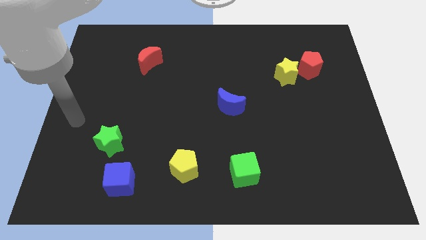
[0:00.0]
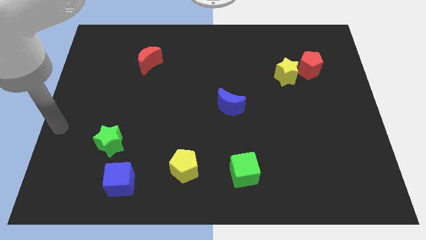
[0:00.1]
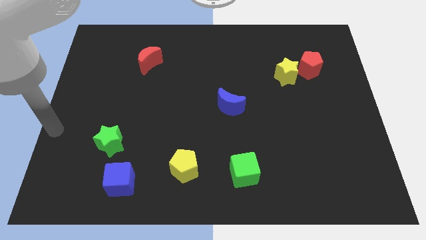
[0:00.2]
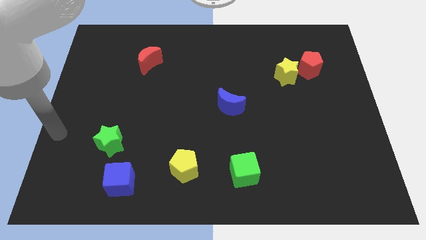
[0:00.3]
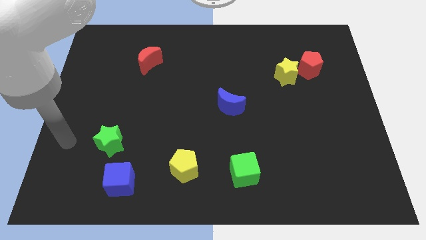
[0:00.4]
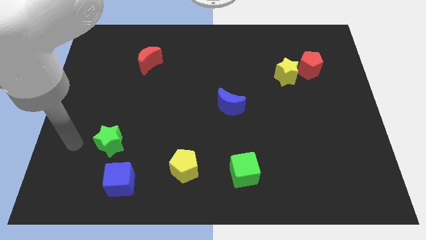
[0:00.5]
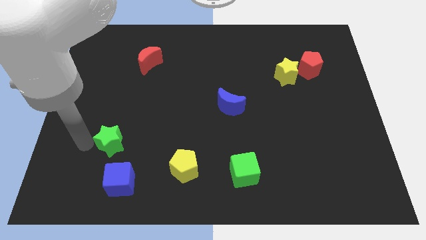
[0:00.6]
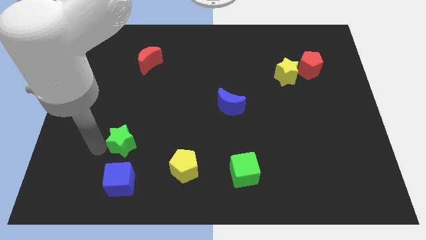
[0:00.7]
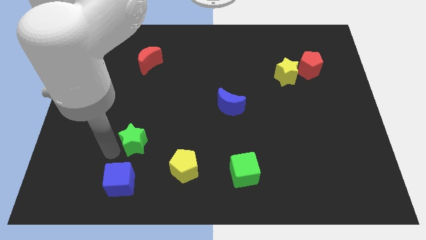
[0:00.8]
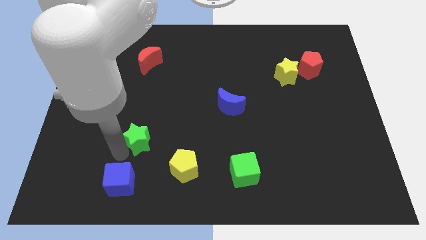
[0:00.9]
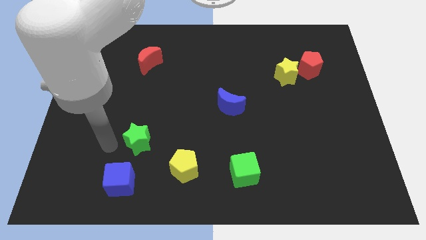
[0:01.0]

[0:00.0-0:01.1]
slide green star to the right slightly

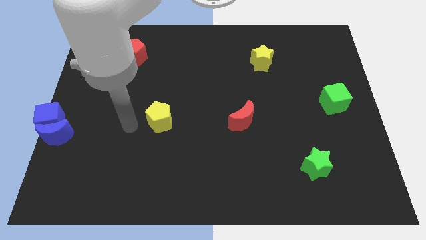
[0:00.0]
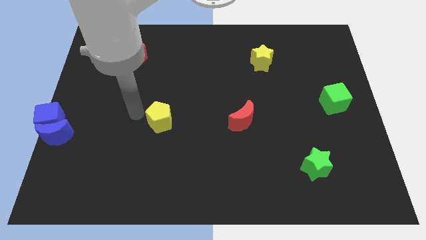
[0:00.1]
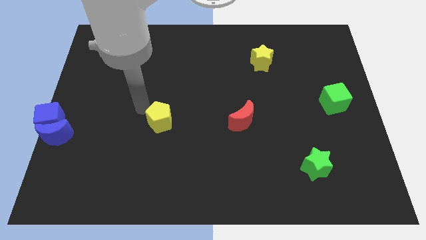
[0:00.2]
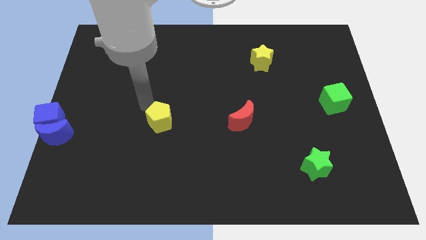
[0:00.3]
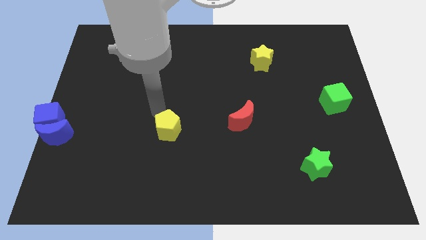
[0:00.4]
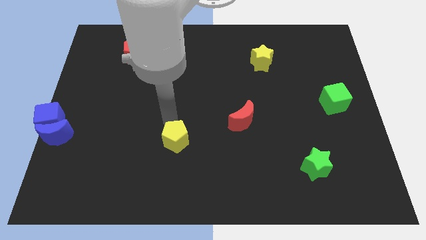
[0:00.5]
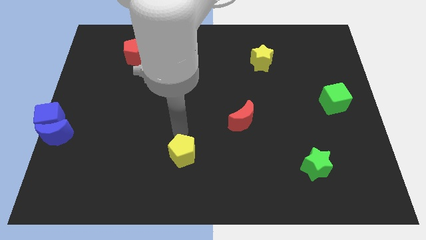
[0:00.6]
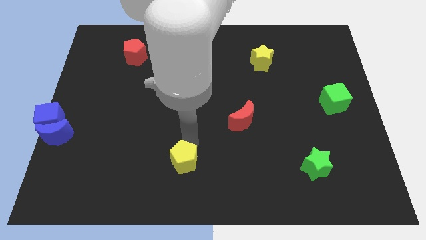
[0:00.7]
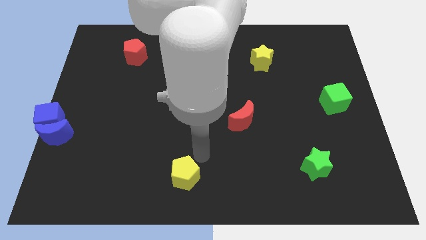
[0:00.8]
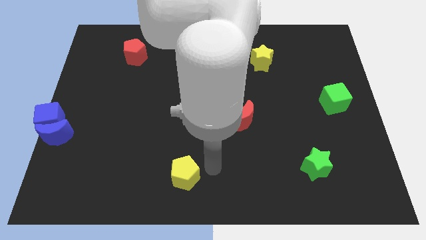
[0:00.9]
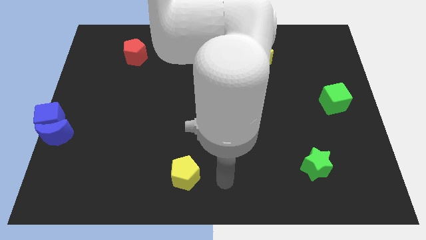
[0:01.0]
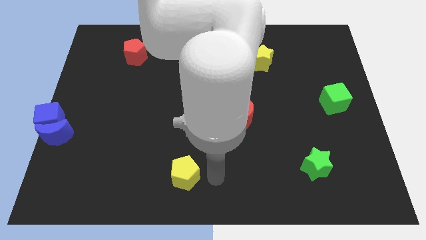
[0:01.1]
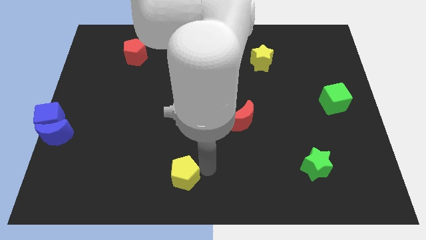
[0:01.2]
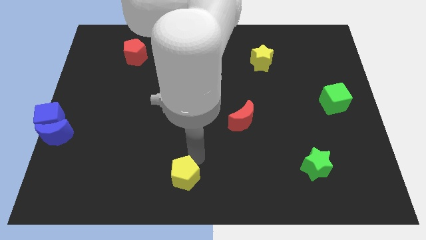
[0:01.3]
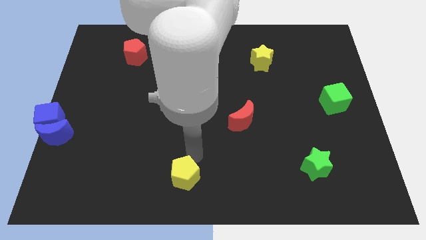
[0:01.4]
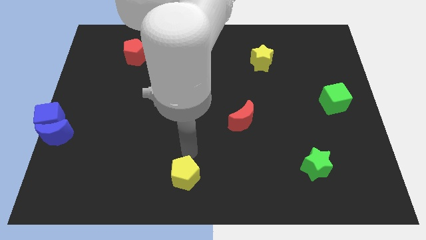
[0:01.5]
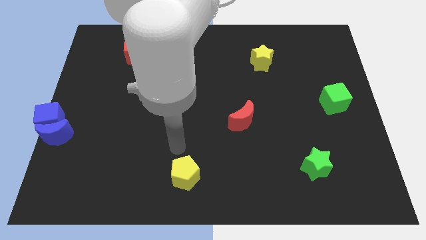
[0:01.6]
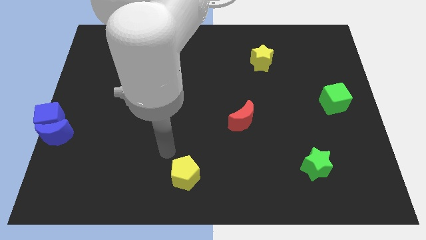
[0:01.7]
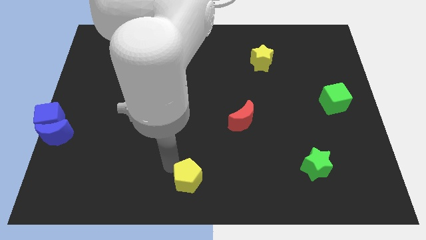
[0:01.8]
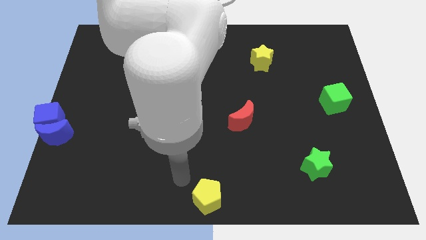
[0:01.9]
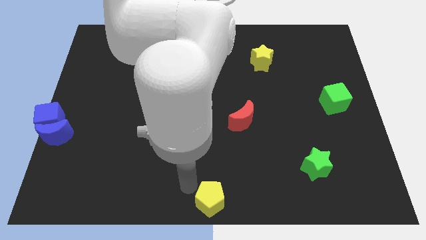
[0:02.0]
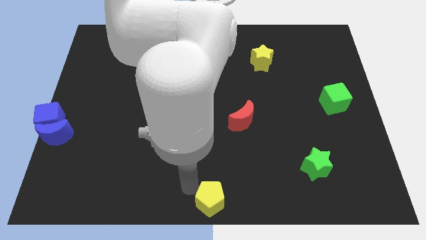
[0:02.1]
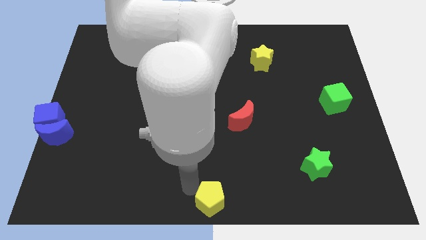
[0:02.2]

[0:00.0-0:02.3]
place the yellow pentagon diagonally to the red moon

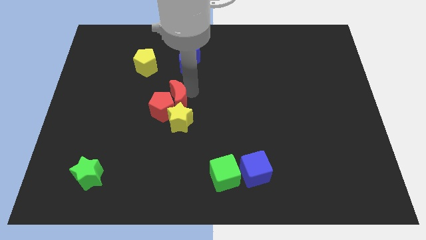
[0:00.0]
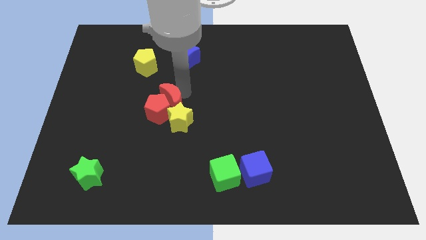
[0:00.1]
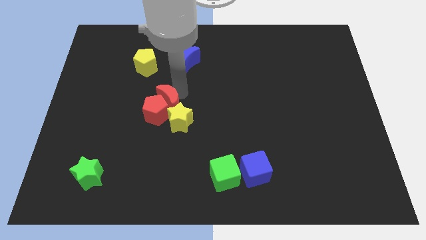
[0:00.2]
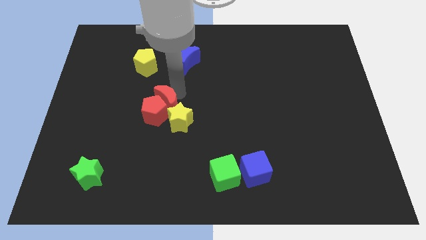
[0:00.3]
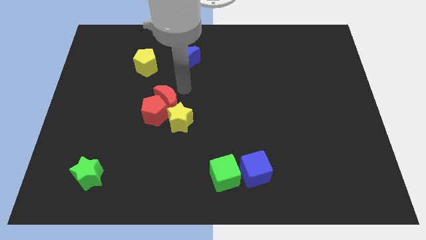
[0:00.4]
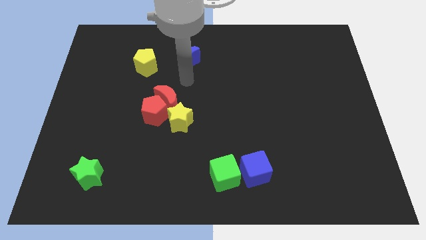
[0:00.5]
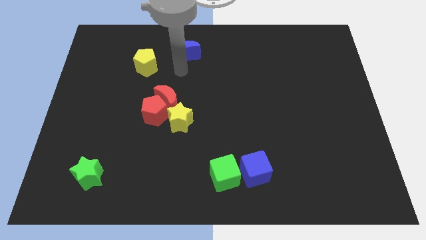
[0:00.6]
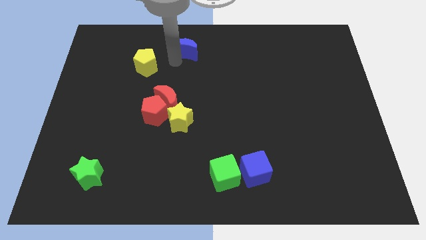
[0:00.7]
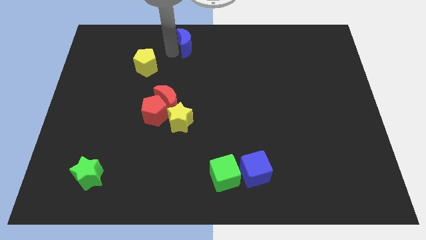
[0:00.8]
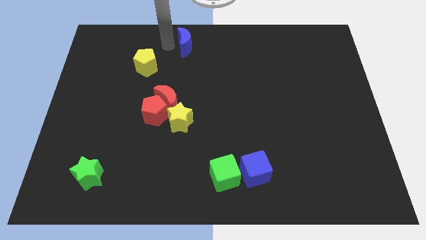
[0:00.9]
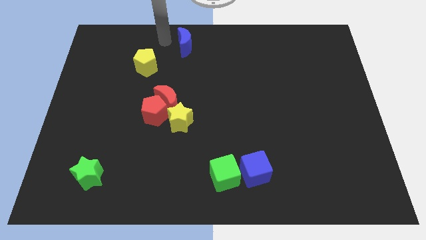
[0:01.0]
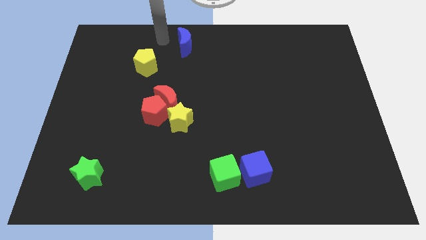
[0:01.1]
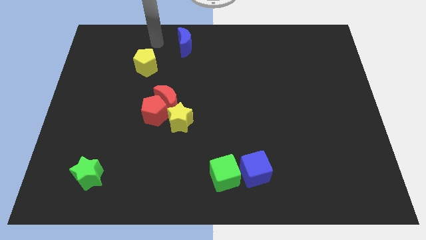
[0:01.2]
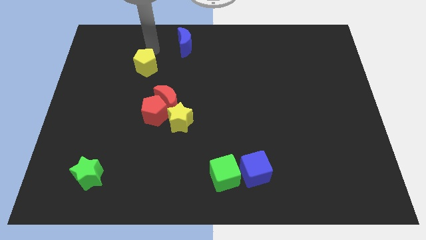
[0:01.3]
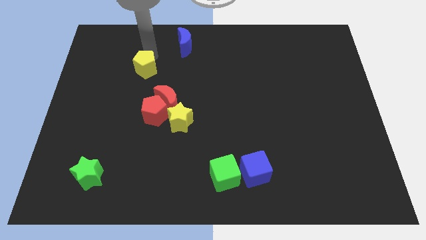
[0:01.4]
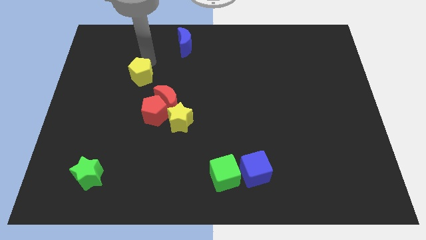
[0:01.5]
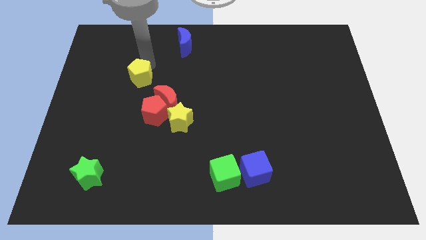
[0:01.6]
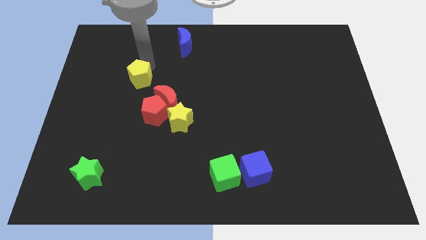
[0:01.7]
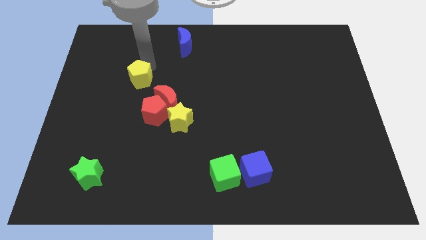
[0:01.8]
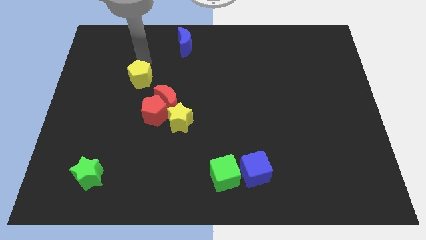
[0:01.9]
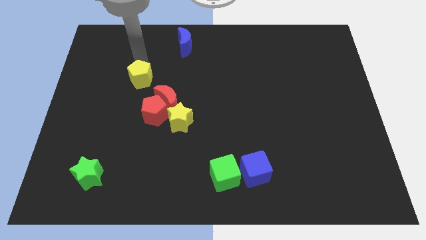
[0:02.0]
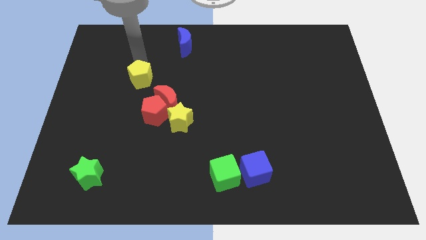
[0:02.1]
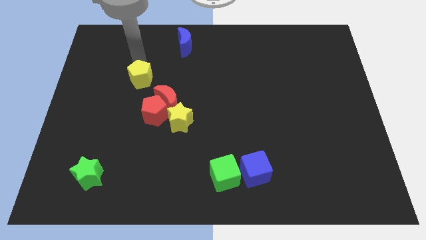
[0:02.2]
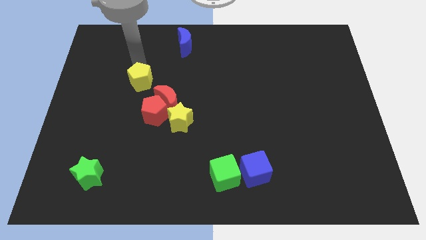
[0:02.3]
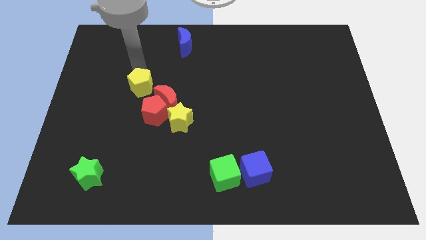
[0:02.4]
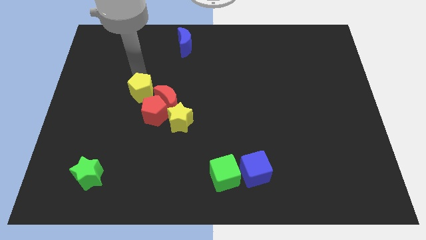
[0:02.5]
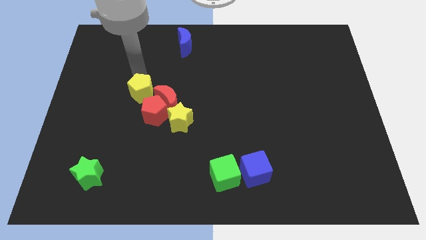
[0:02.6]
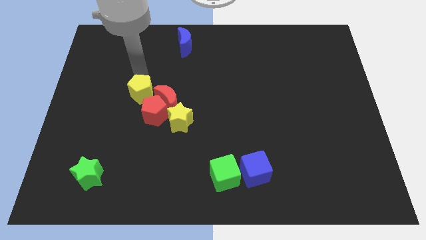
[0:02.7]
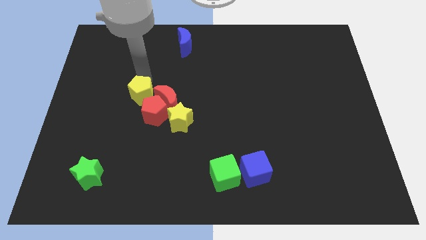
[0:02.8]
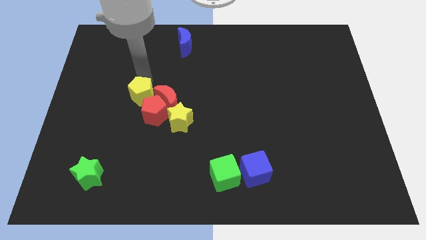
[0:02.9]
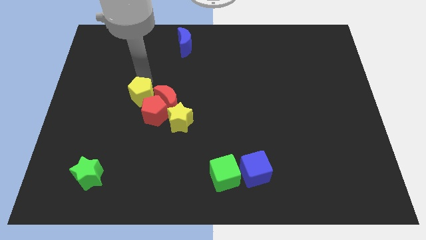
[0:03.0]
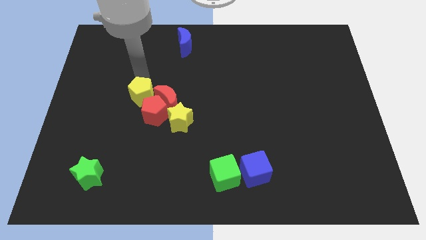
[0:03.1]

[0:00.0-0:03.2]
place yellow pentagon above red pentagon

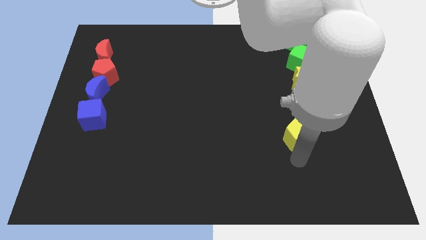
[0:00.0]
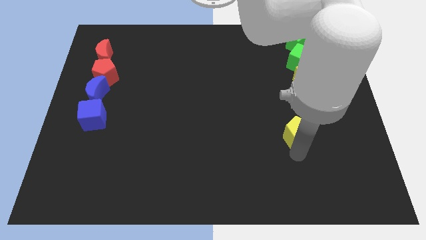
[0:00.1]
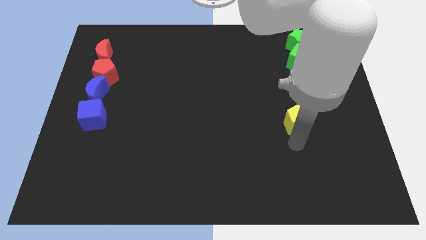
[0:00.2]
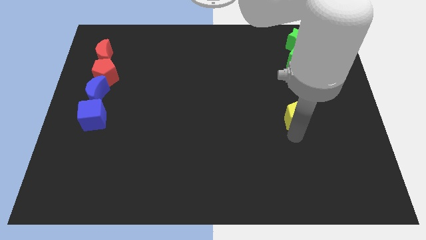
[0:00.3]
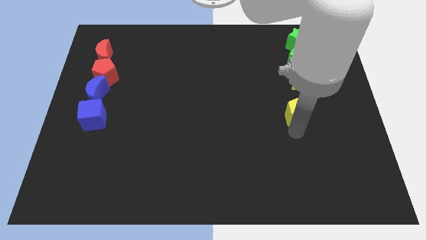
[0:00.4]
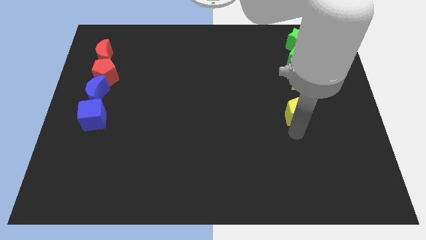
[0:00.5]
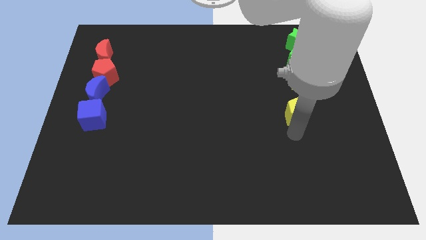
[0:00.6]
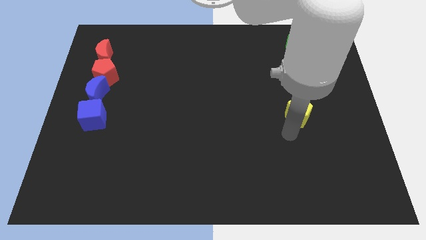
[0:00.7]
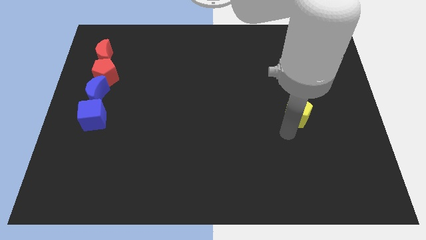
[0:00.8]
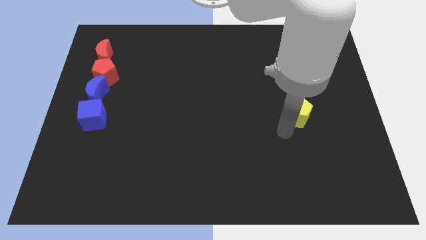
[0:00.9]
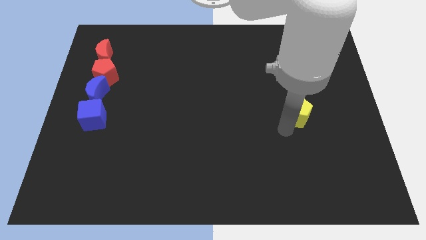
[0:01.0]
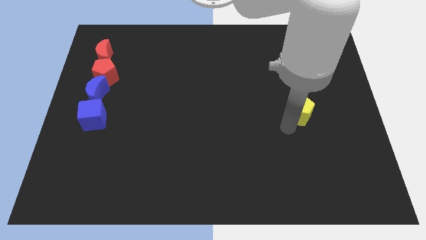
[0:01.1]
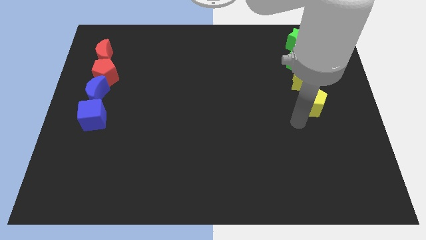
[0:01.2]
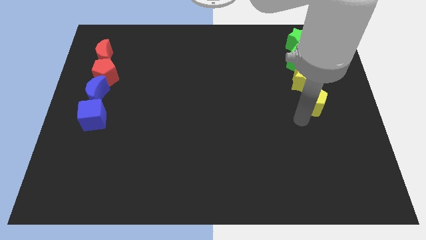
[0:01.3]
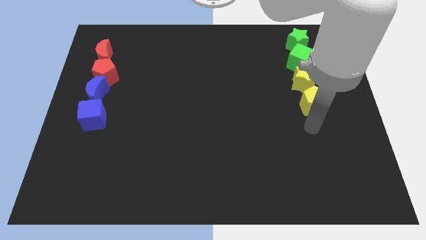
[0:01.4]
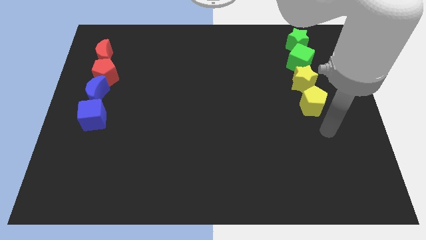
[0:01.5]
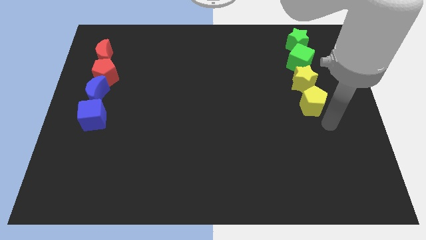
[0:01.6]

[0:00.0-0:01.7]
push the yellow pentagon below to the yellow star

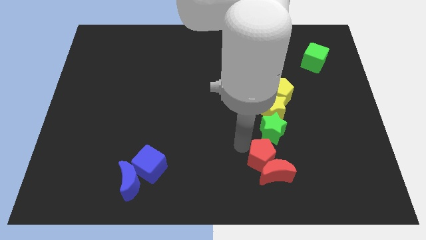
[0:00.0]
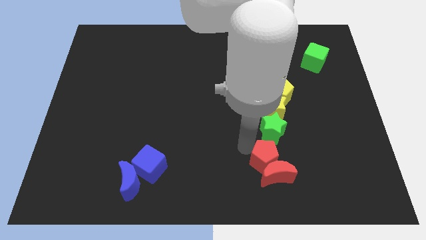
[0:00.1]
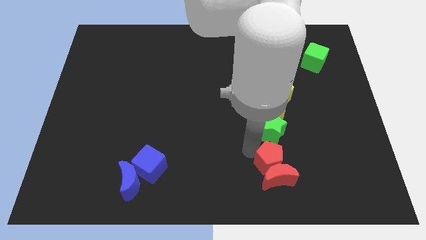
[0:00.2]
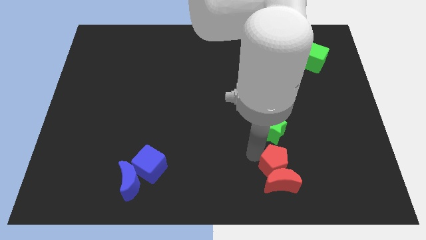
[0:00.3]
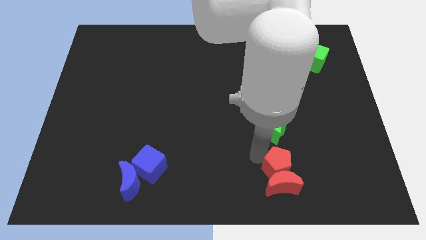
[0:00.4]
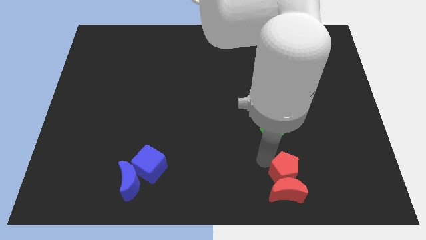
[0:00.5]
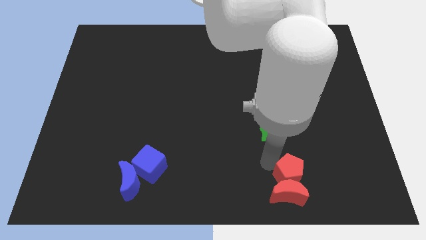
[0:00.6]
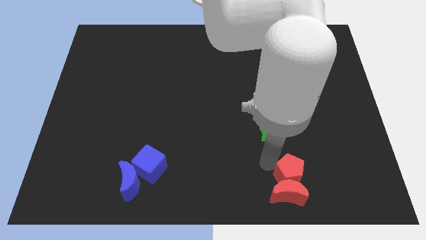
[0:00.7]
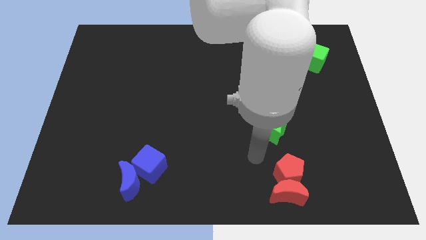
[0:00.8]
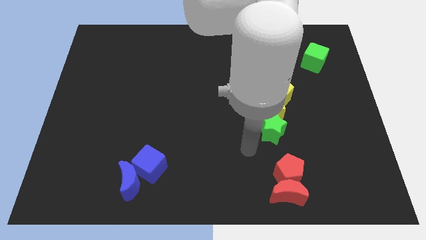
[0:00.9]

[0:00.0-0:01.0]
move the red blocks to the bottom of the board
